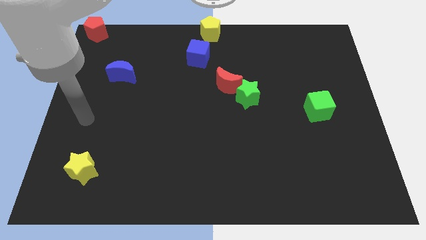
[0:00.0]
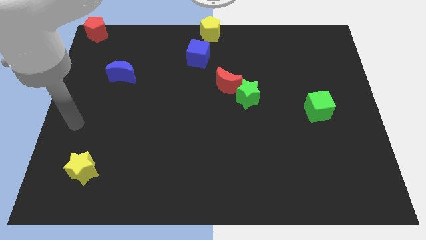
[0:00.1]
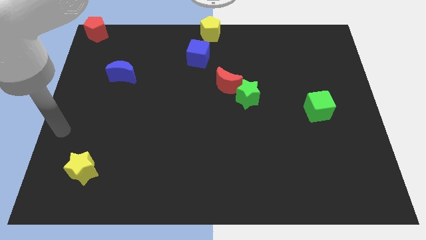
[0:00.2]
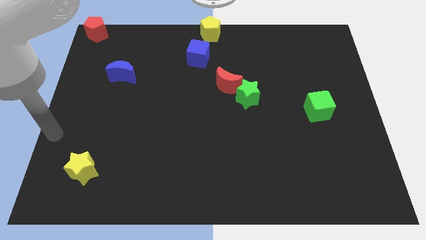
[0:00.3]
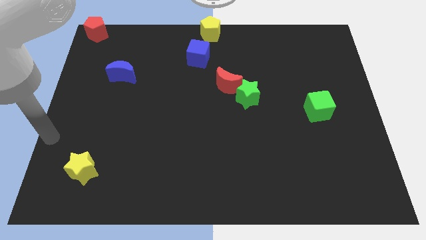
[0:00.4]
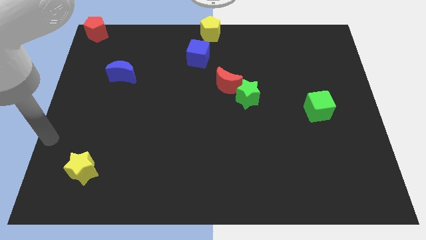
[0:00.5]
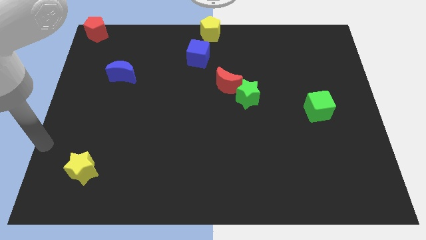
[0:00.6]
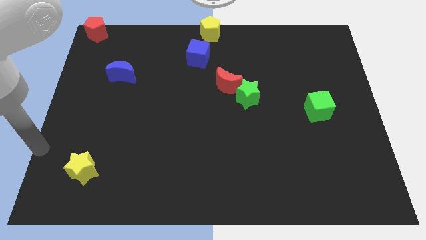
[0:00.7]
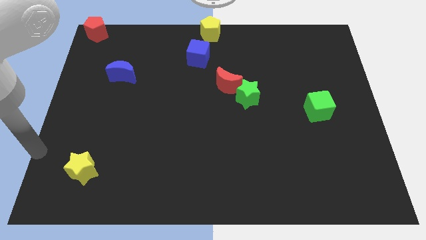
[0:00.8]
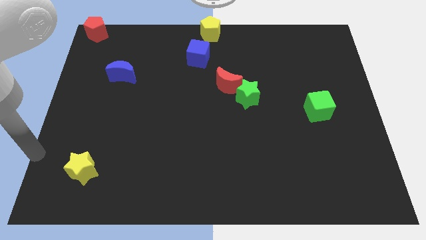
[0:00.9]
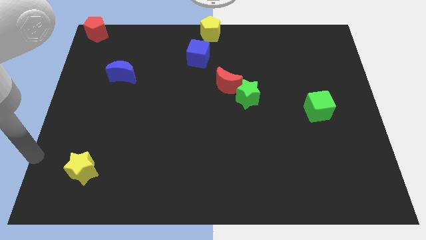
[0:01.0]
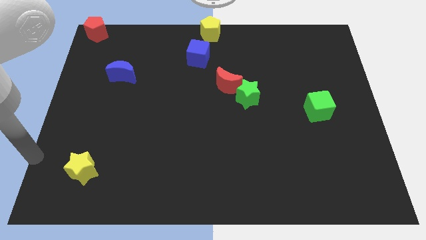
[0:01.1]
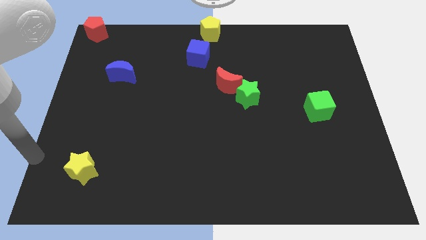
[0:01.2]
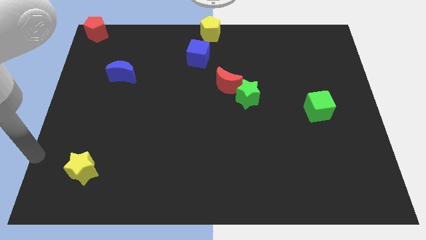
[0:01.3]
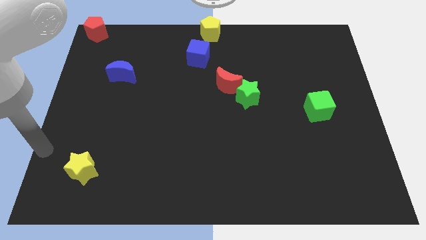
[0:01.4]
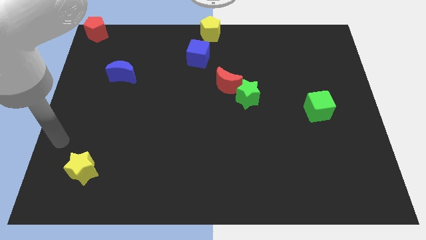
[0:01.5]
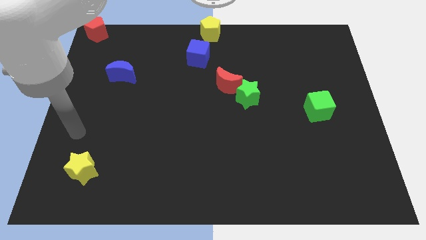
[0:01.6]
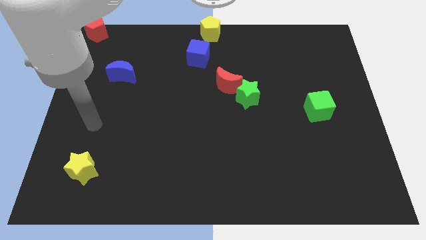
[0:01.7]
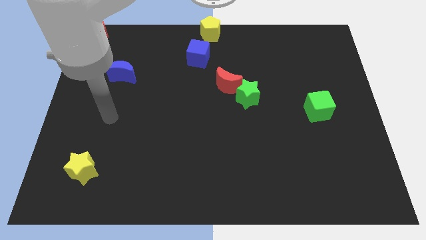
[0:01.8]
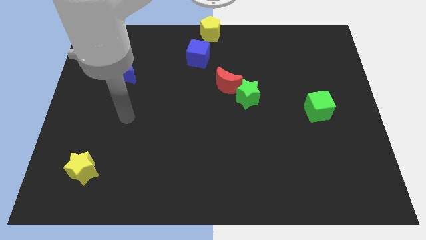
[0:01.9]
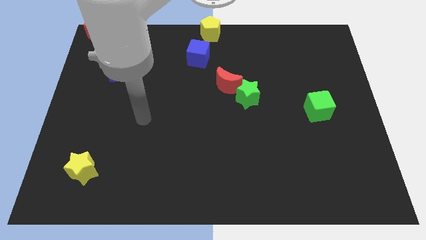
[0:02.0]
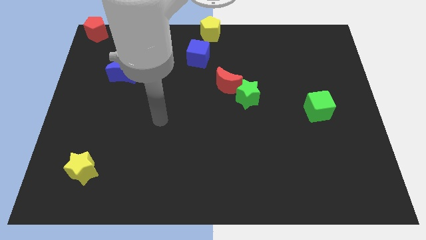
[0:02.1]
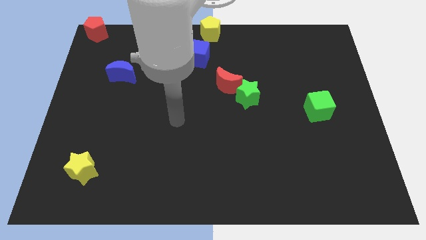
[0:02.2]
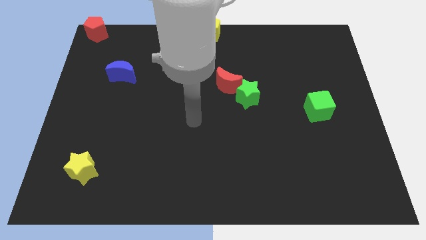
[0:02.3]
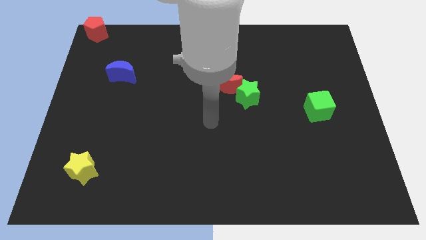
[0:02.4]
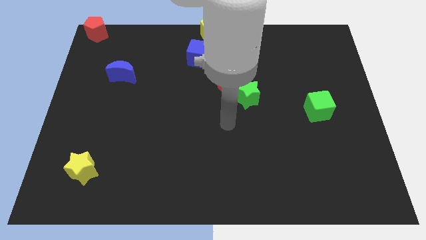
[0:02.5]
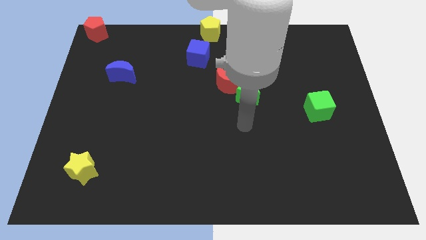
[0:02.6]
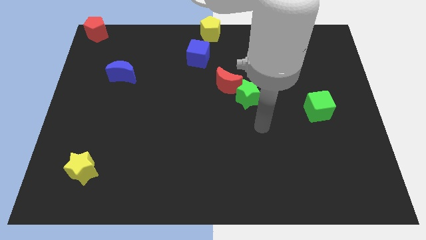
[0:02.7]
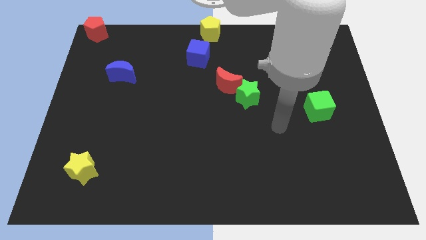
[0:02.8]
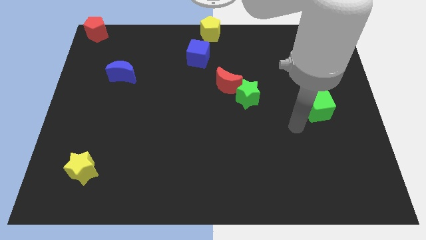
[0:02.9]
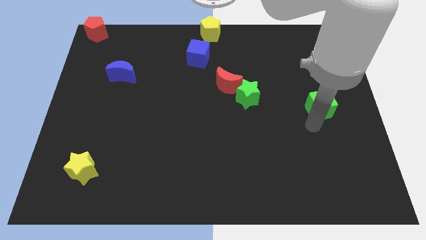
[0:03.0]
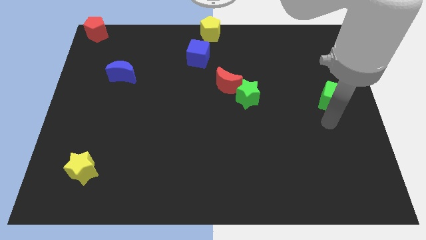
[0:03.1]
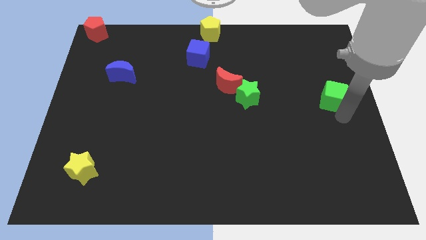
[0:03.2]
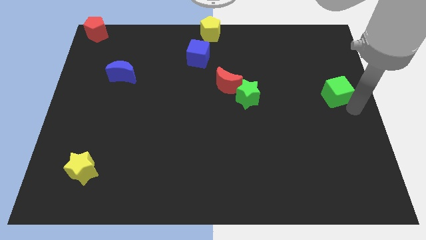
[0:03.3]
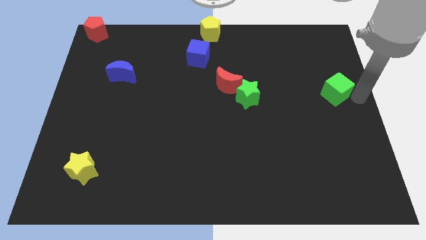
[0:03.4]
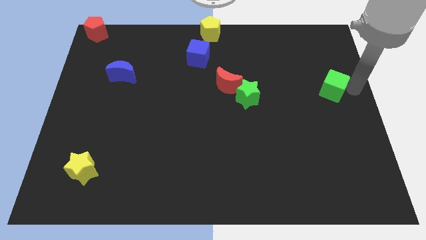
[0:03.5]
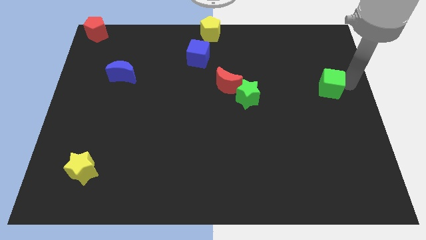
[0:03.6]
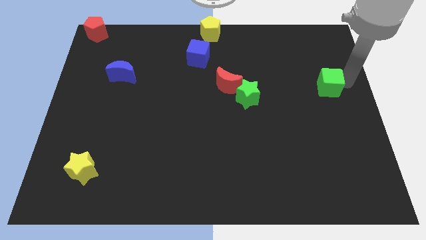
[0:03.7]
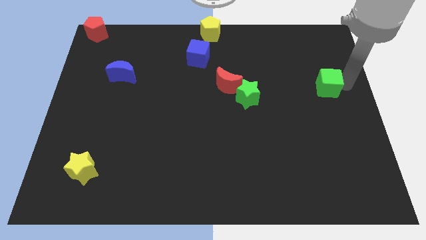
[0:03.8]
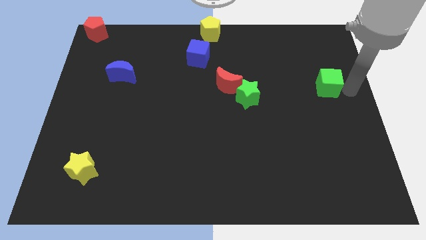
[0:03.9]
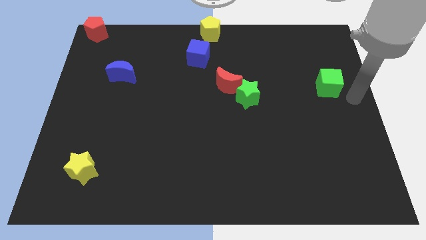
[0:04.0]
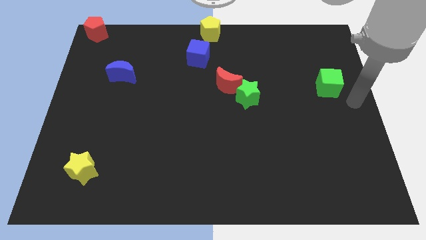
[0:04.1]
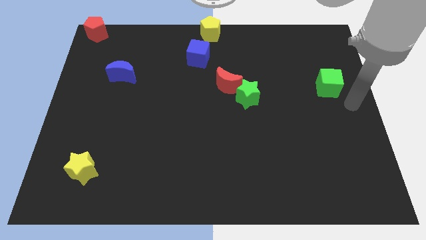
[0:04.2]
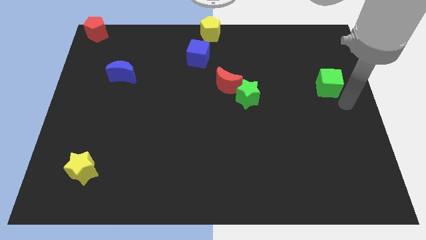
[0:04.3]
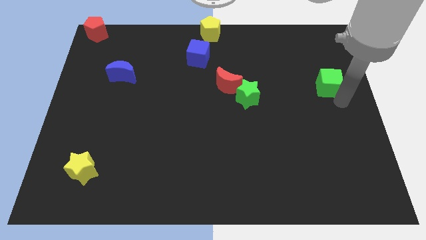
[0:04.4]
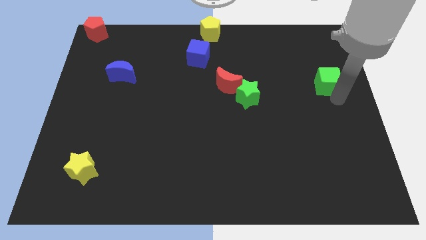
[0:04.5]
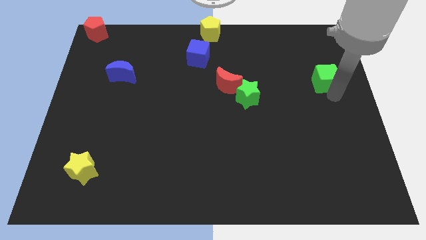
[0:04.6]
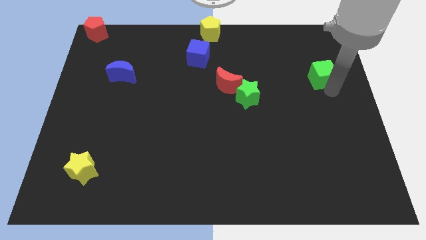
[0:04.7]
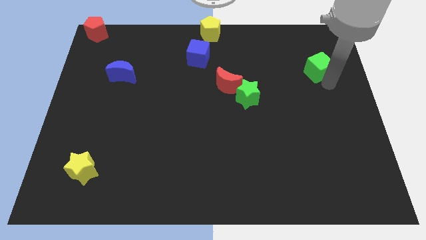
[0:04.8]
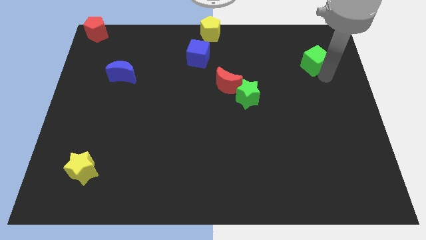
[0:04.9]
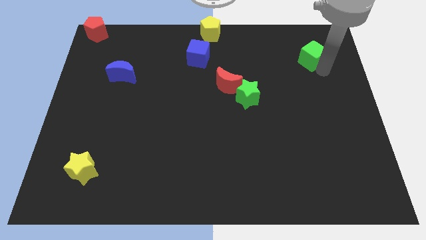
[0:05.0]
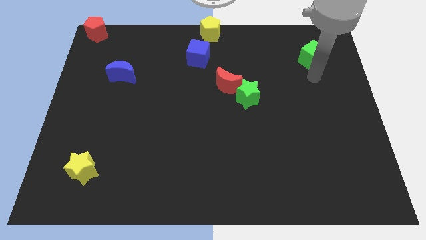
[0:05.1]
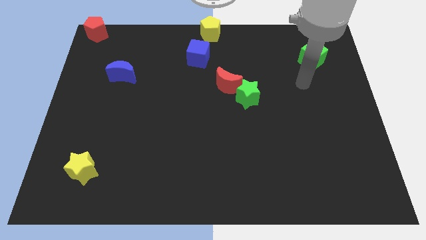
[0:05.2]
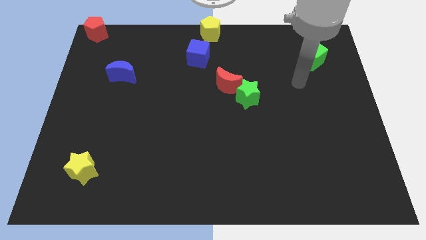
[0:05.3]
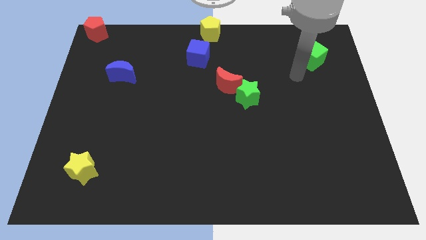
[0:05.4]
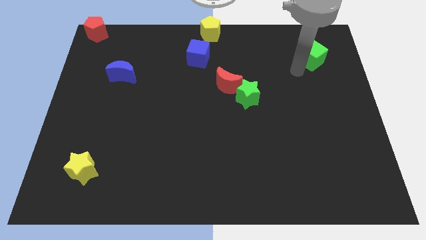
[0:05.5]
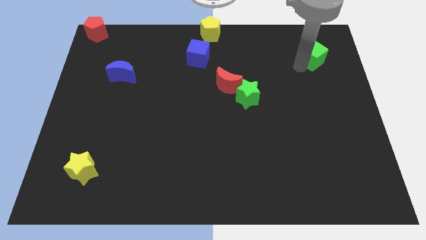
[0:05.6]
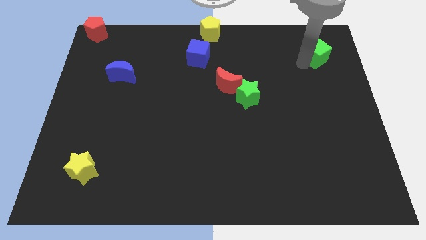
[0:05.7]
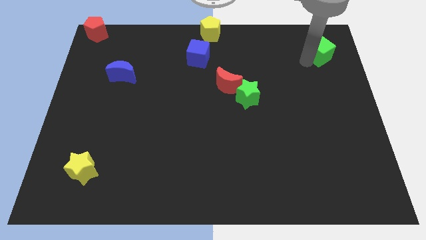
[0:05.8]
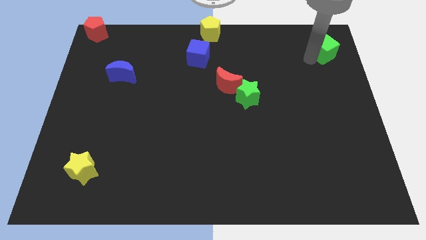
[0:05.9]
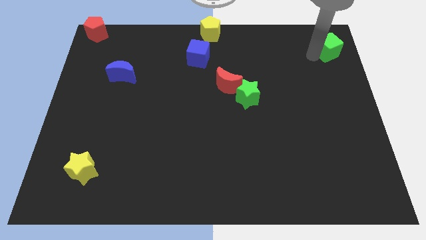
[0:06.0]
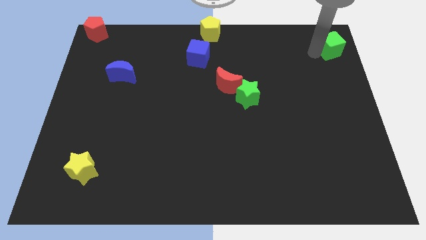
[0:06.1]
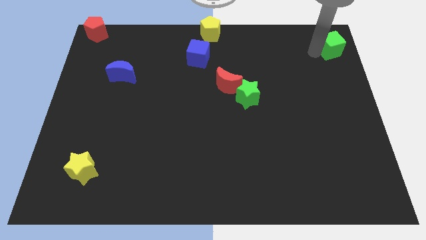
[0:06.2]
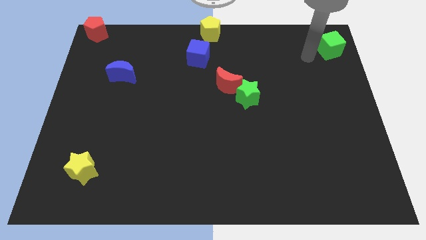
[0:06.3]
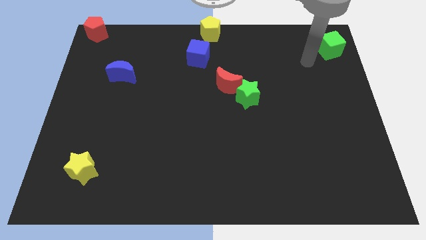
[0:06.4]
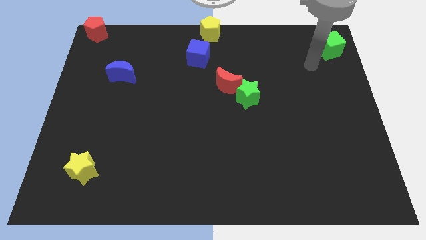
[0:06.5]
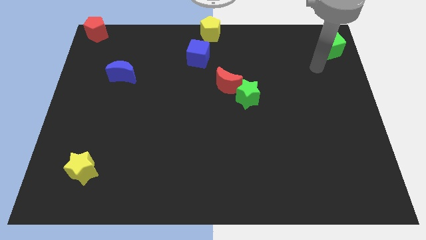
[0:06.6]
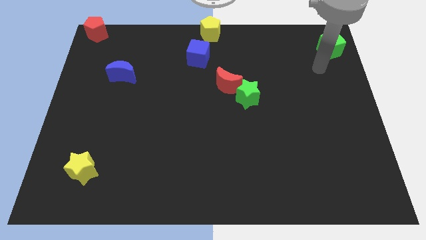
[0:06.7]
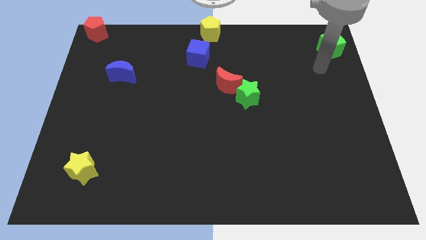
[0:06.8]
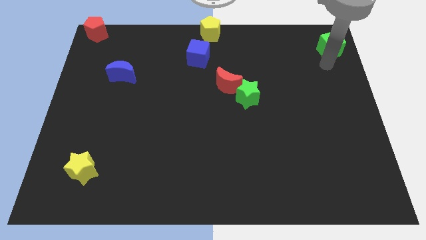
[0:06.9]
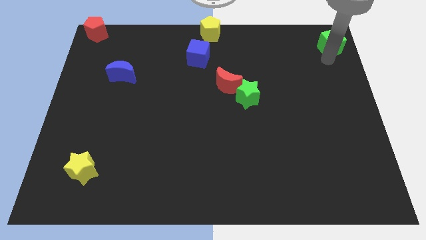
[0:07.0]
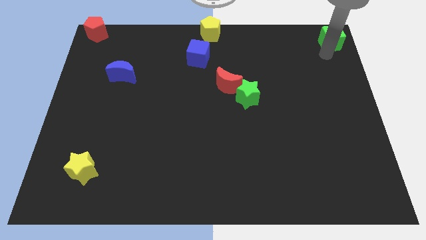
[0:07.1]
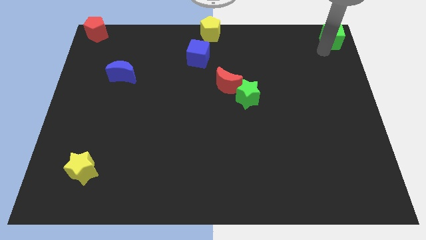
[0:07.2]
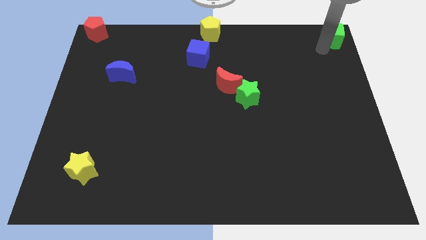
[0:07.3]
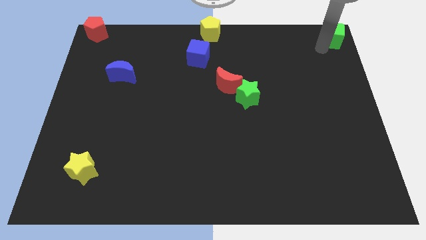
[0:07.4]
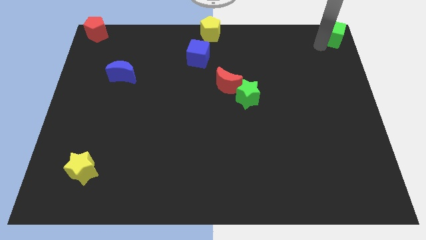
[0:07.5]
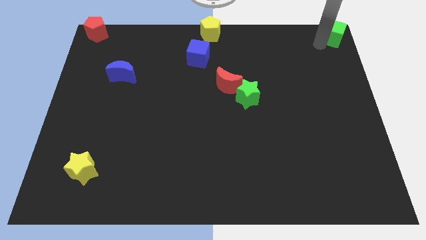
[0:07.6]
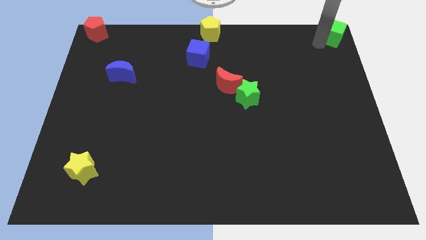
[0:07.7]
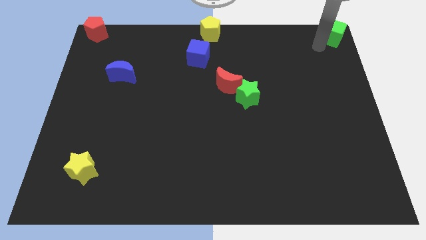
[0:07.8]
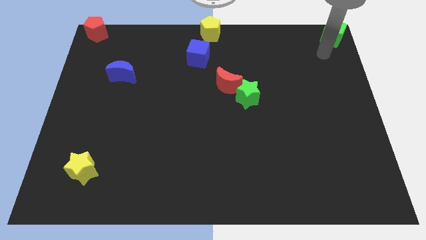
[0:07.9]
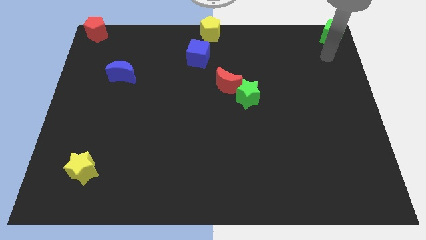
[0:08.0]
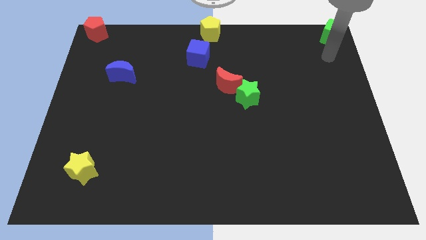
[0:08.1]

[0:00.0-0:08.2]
place the green cube to the top right

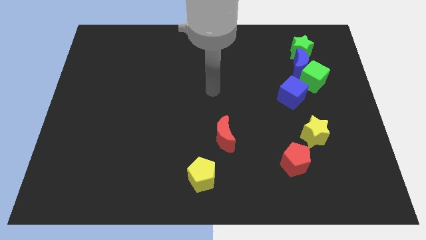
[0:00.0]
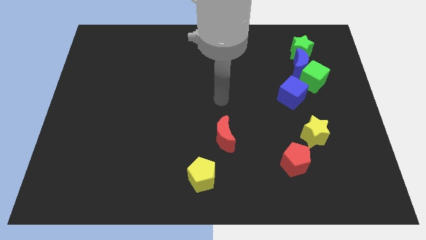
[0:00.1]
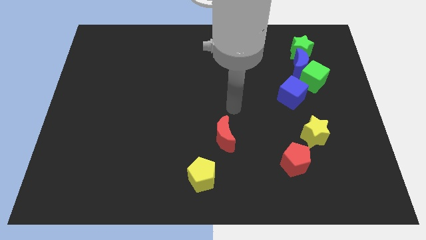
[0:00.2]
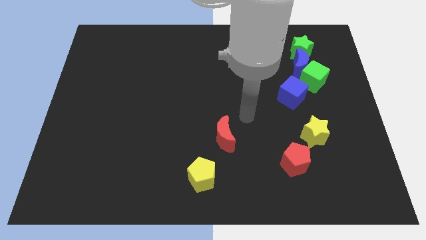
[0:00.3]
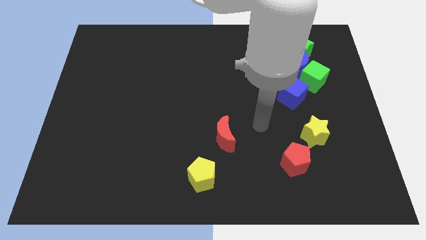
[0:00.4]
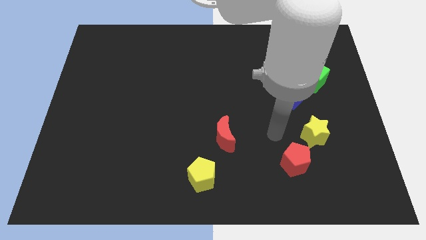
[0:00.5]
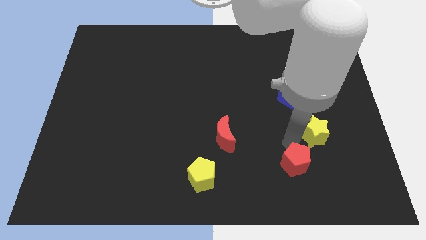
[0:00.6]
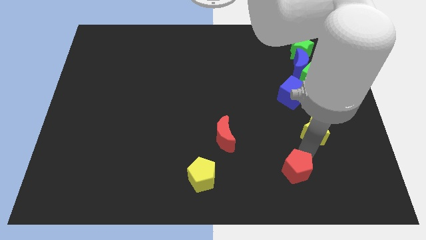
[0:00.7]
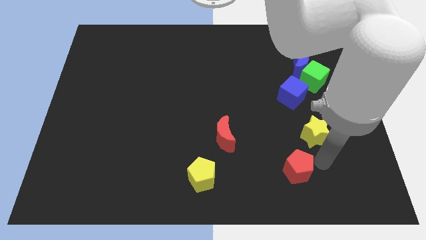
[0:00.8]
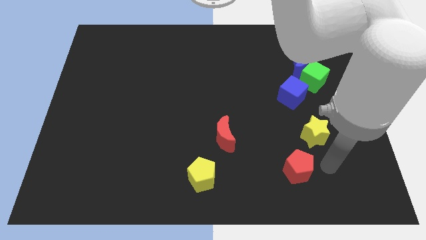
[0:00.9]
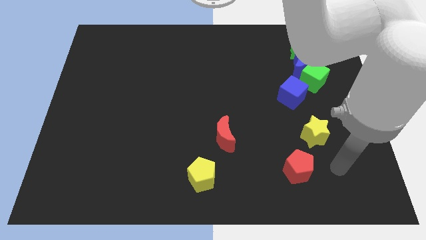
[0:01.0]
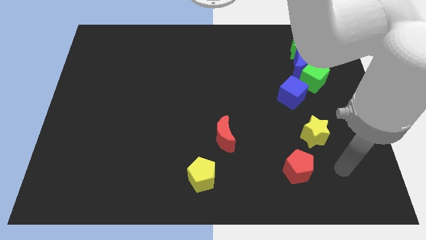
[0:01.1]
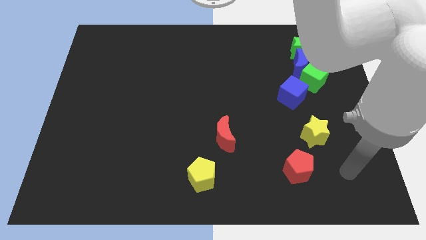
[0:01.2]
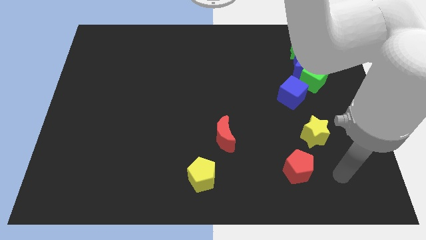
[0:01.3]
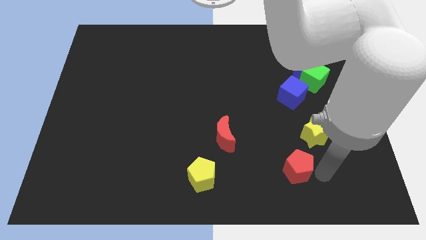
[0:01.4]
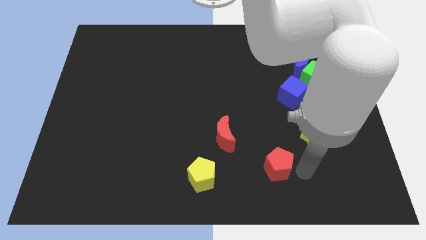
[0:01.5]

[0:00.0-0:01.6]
move your arm towards the red pentagon
